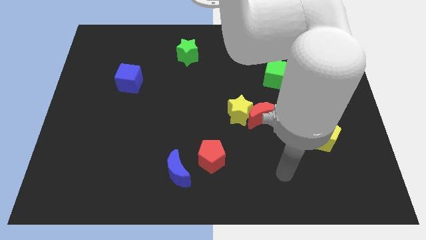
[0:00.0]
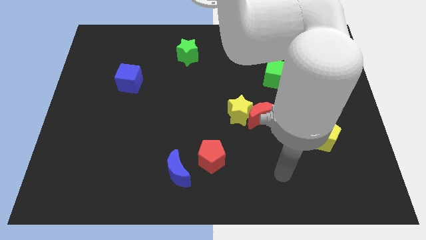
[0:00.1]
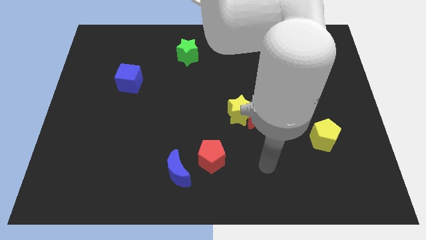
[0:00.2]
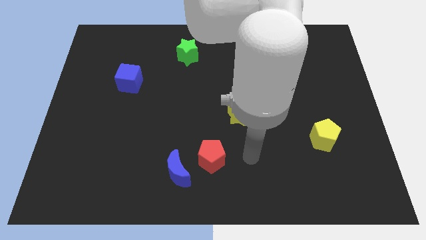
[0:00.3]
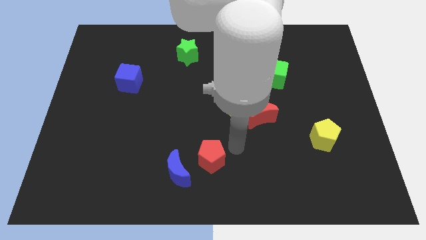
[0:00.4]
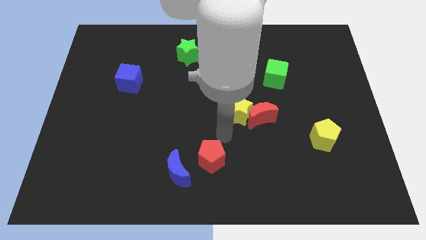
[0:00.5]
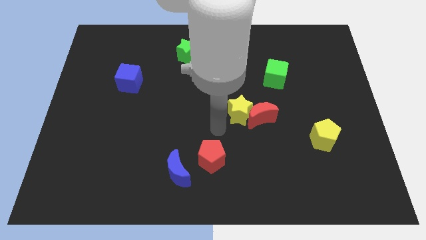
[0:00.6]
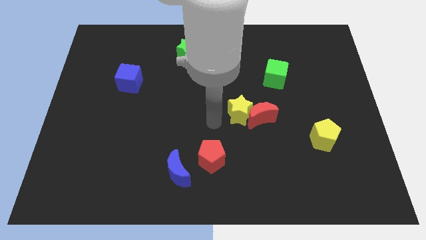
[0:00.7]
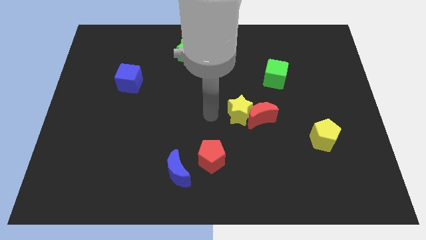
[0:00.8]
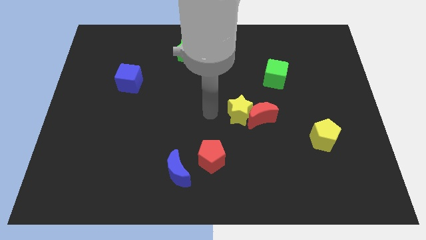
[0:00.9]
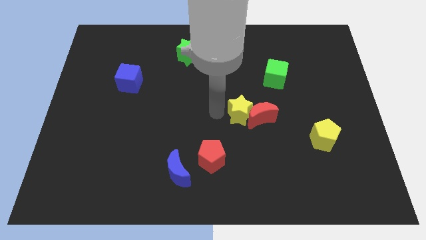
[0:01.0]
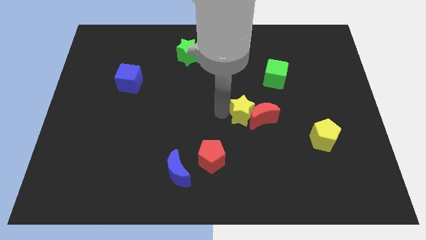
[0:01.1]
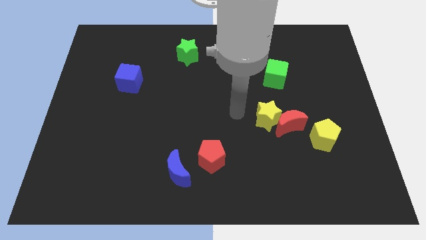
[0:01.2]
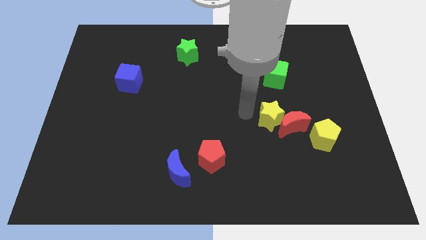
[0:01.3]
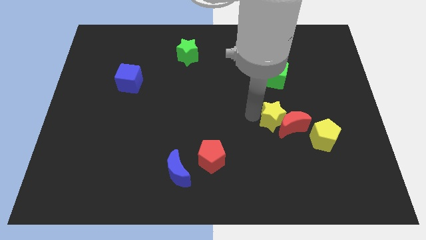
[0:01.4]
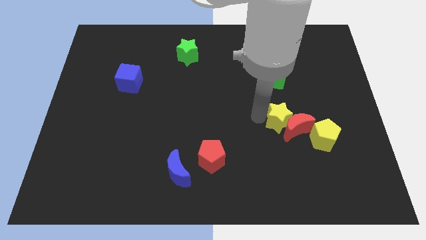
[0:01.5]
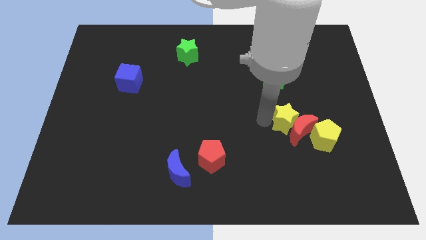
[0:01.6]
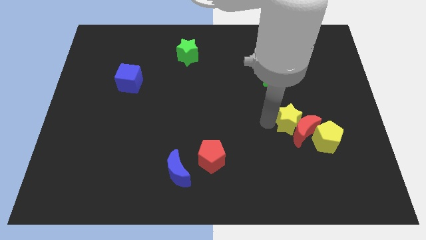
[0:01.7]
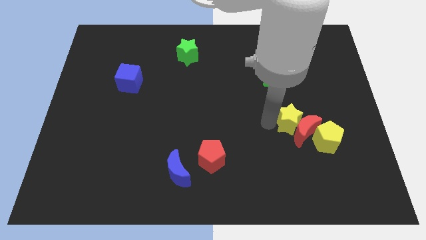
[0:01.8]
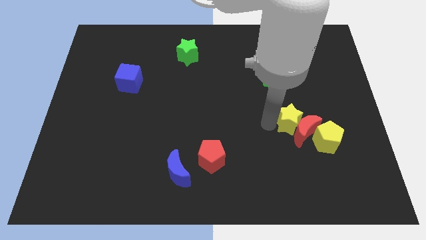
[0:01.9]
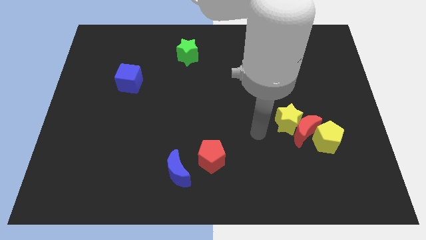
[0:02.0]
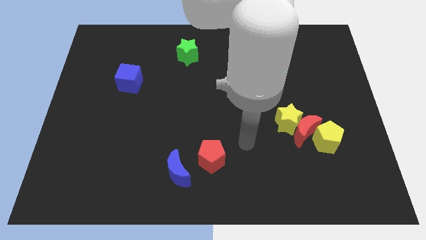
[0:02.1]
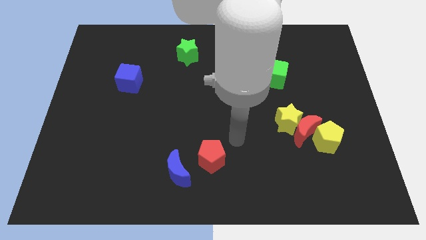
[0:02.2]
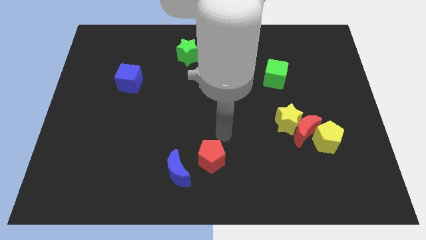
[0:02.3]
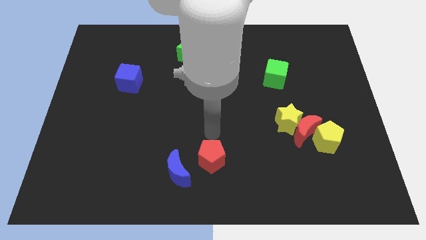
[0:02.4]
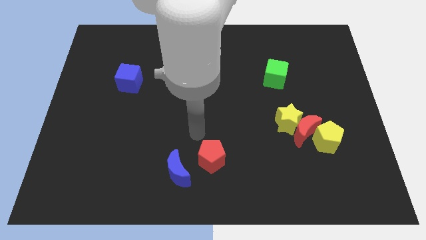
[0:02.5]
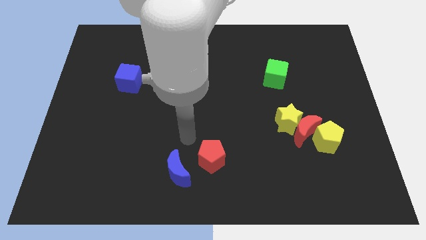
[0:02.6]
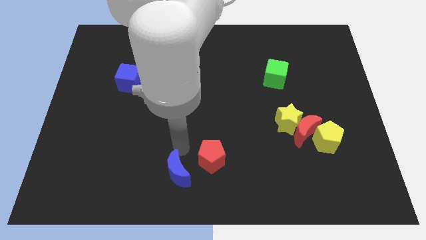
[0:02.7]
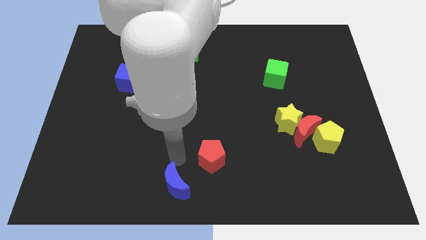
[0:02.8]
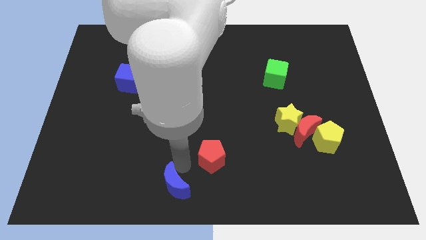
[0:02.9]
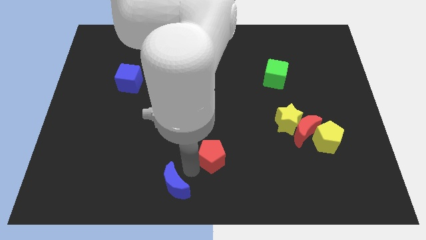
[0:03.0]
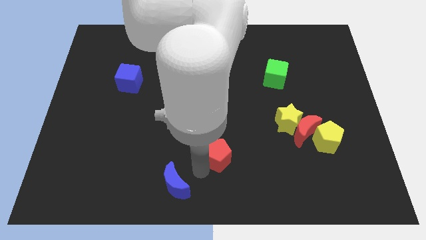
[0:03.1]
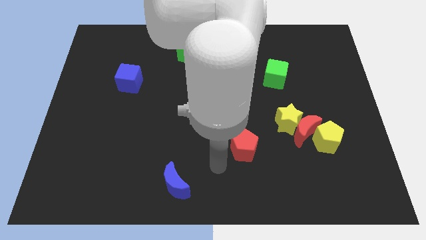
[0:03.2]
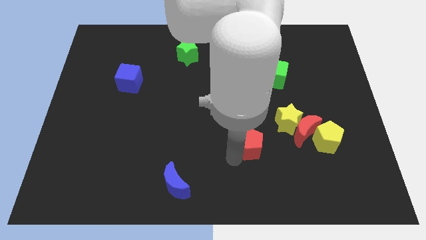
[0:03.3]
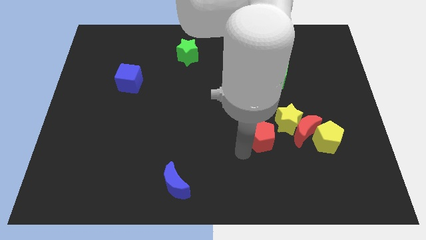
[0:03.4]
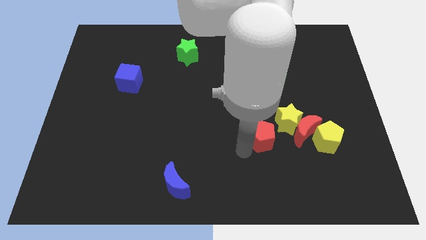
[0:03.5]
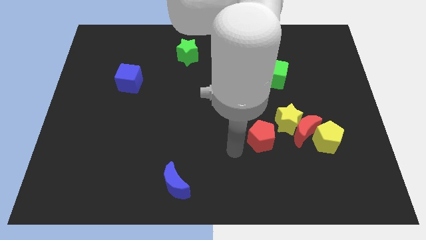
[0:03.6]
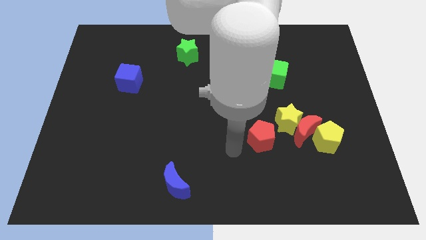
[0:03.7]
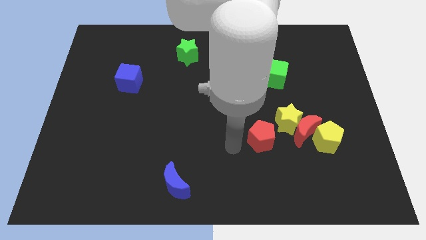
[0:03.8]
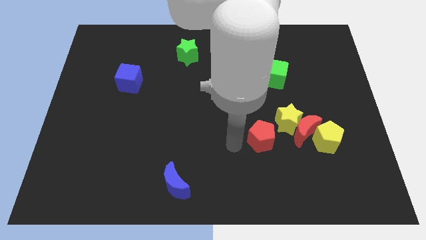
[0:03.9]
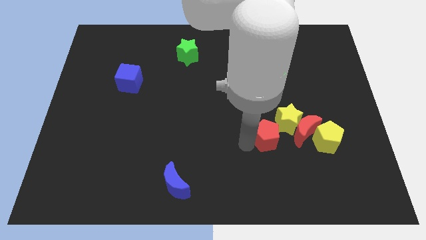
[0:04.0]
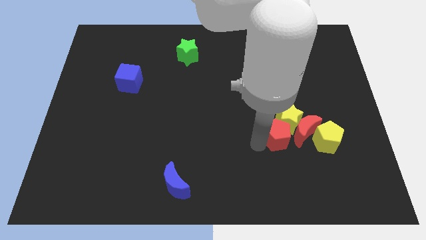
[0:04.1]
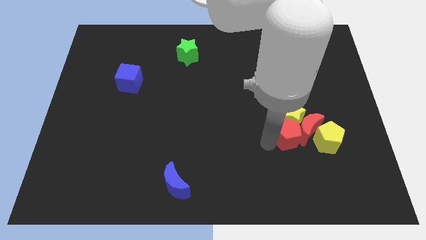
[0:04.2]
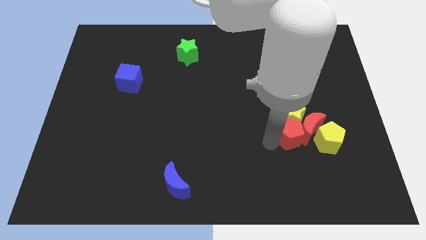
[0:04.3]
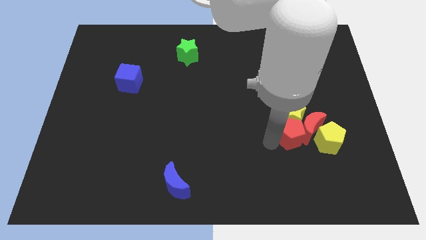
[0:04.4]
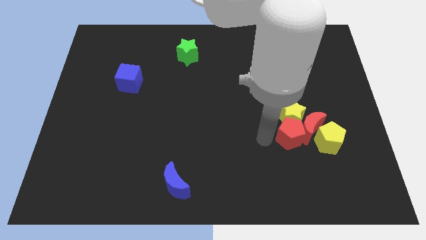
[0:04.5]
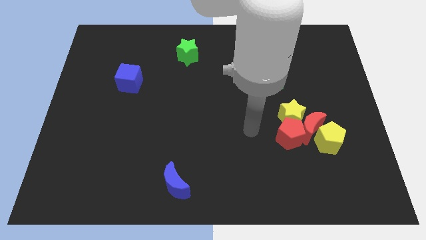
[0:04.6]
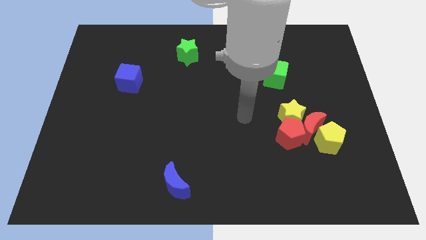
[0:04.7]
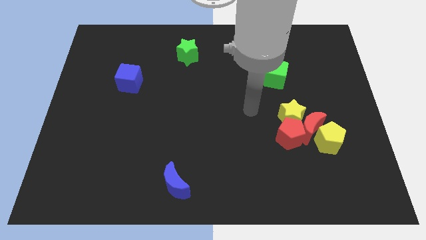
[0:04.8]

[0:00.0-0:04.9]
push the yellow star along with the red moon towards the yellow pentagon

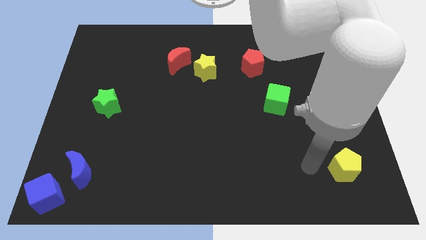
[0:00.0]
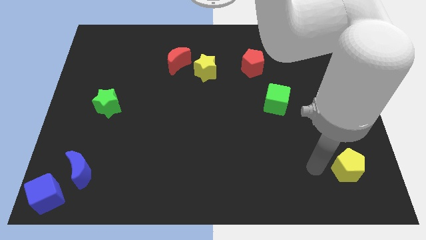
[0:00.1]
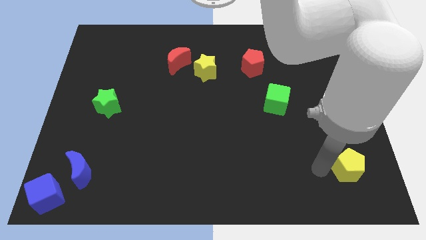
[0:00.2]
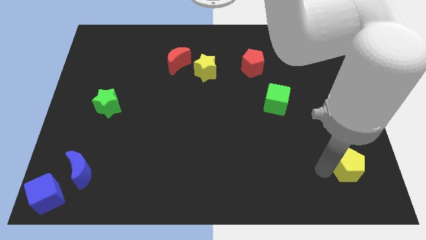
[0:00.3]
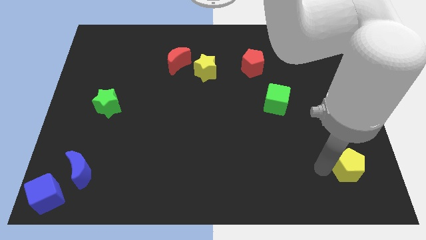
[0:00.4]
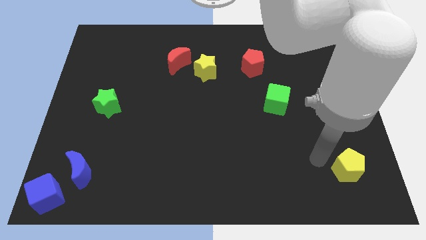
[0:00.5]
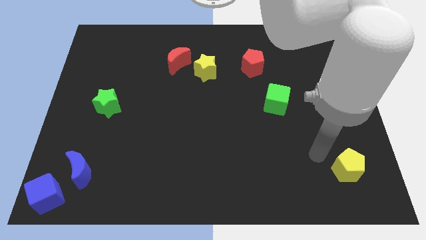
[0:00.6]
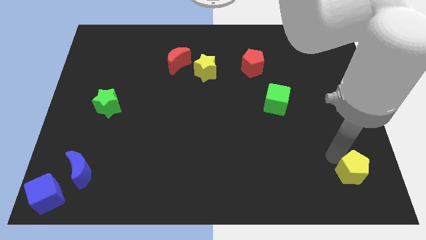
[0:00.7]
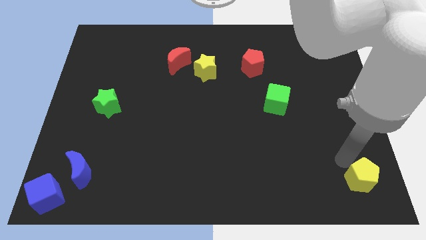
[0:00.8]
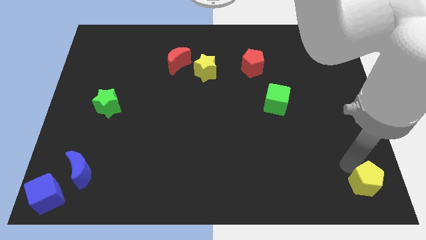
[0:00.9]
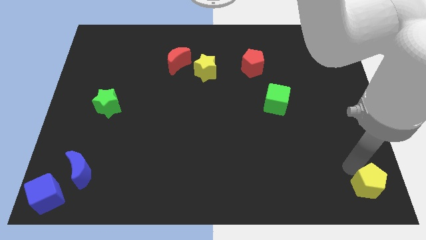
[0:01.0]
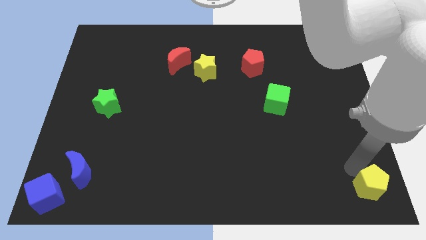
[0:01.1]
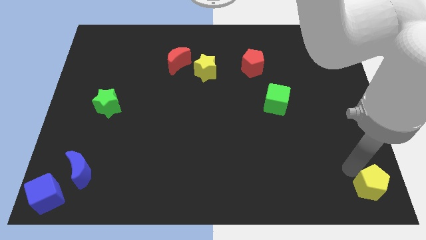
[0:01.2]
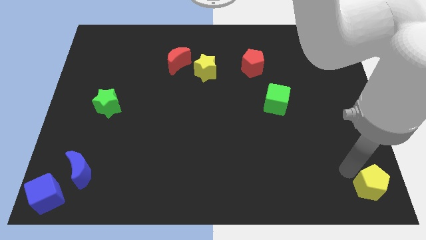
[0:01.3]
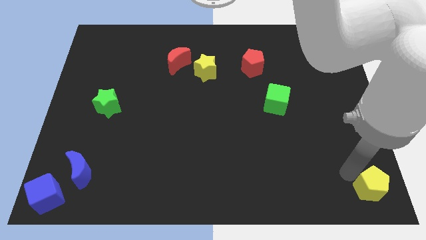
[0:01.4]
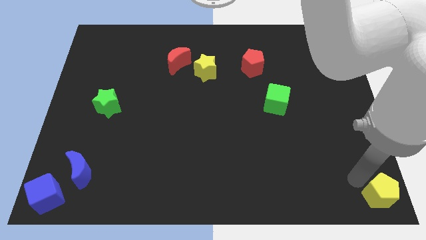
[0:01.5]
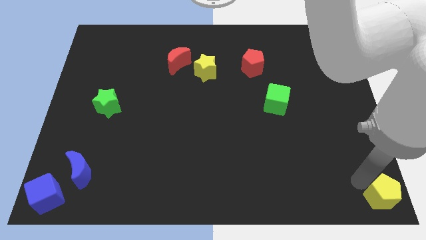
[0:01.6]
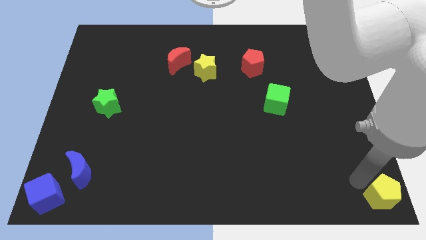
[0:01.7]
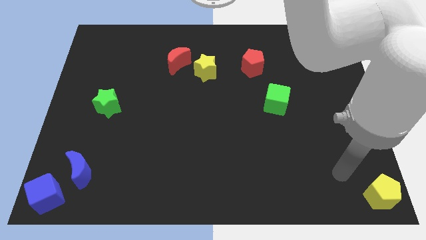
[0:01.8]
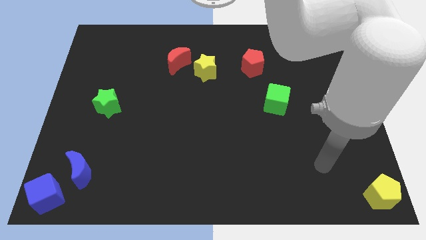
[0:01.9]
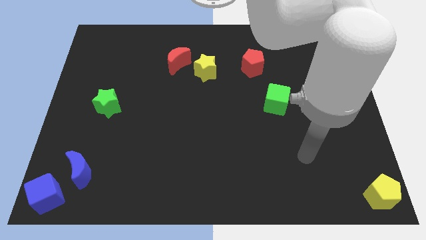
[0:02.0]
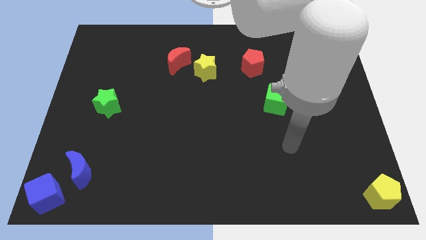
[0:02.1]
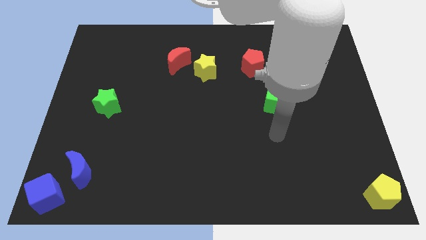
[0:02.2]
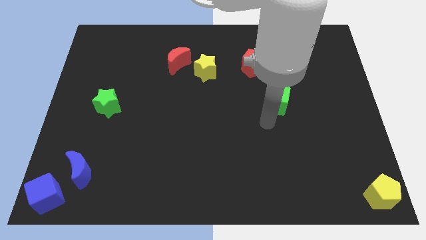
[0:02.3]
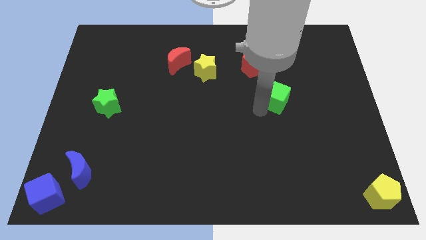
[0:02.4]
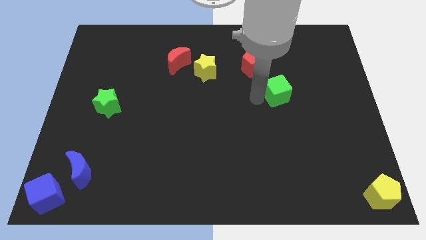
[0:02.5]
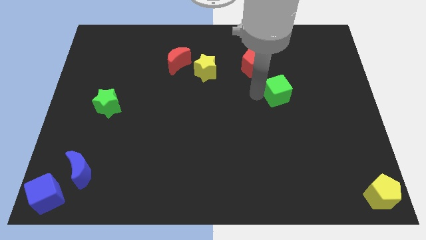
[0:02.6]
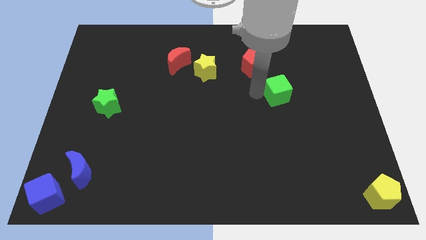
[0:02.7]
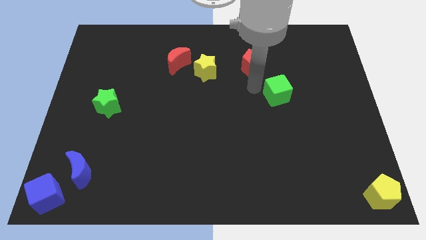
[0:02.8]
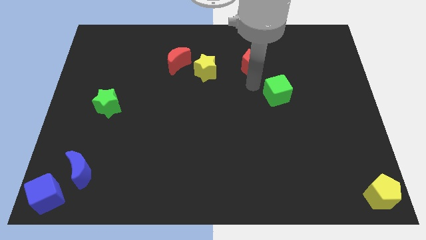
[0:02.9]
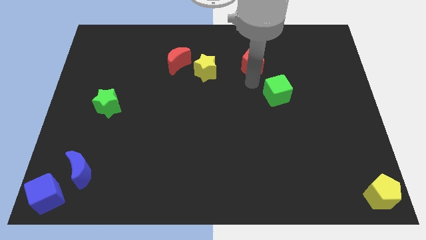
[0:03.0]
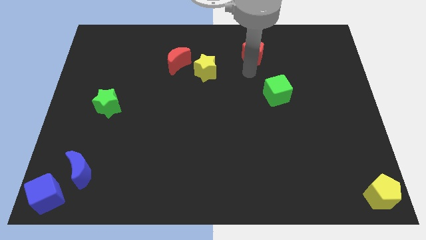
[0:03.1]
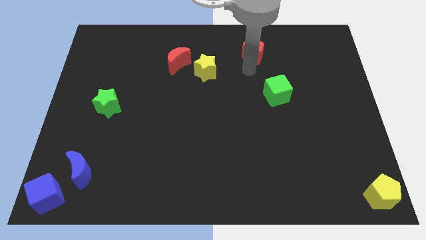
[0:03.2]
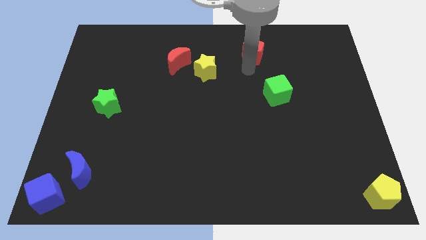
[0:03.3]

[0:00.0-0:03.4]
put the yellow pentagon at the bottom right corner

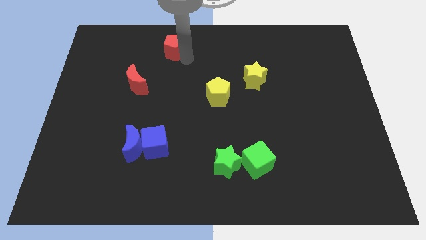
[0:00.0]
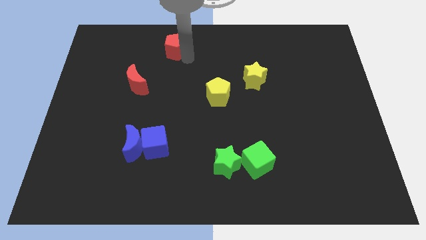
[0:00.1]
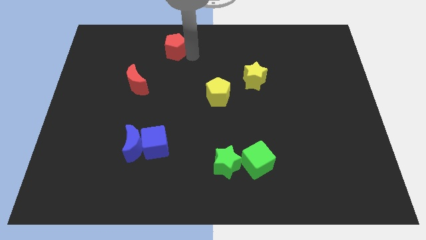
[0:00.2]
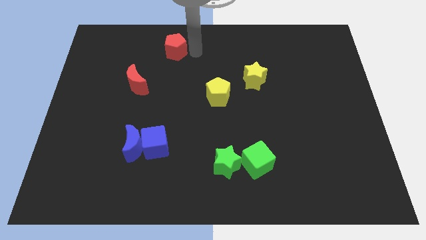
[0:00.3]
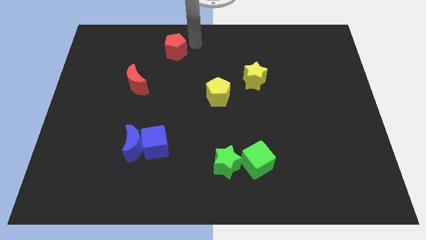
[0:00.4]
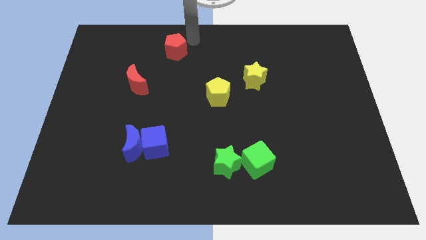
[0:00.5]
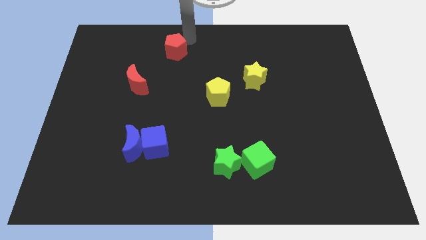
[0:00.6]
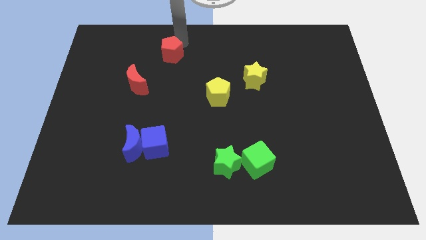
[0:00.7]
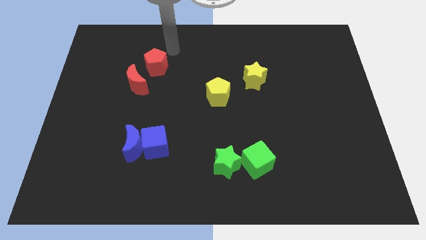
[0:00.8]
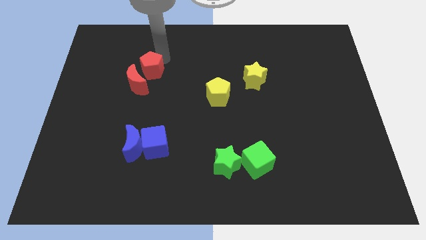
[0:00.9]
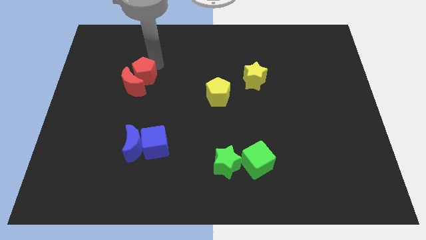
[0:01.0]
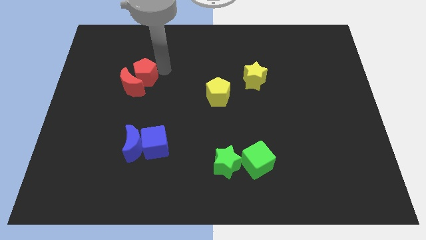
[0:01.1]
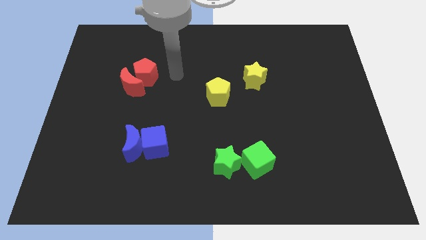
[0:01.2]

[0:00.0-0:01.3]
move the red pentagon into the red crescent
